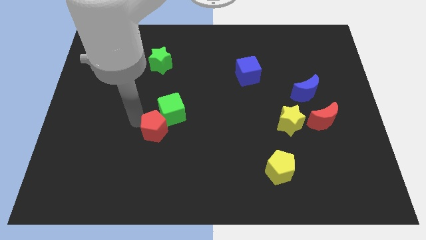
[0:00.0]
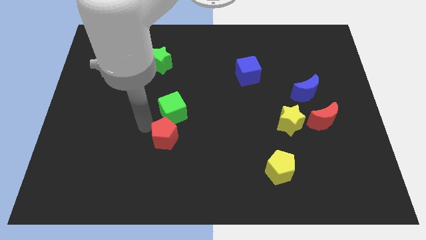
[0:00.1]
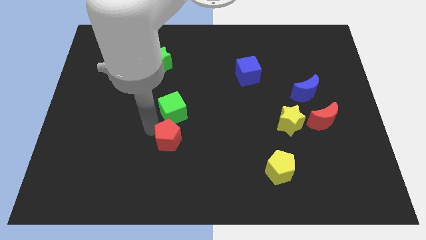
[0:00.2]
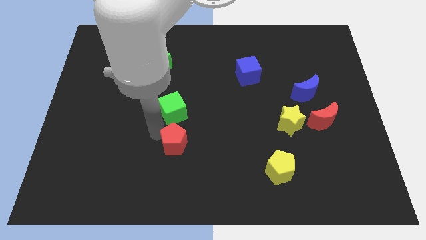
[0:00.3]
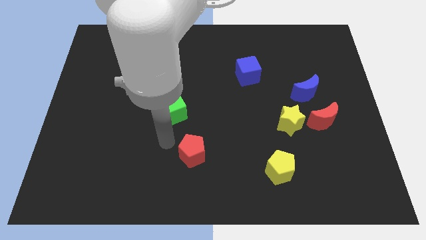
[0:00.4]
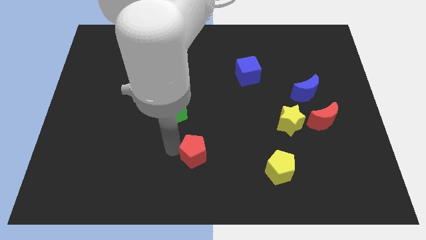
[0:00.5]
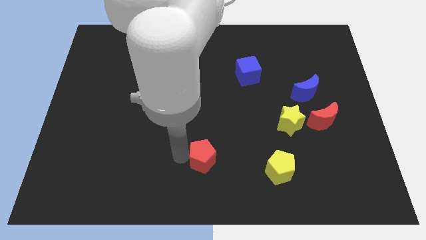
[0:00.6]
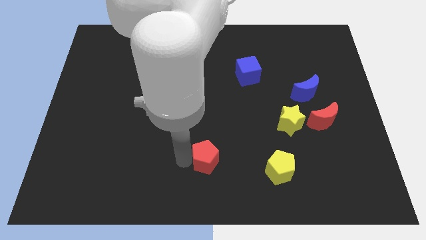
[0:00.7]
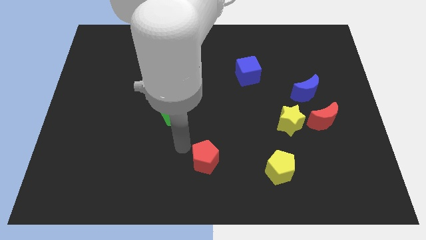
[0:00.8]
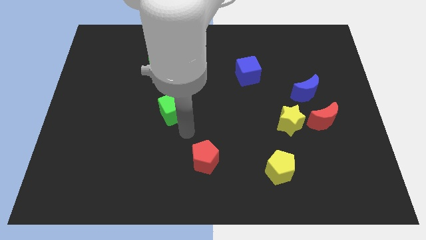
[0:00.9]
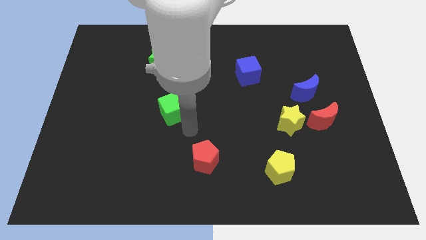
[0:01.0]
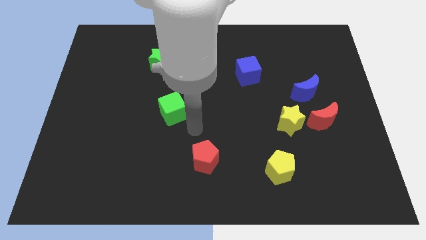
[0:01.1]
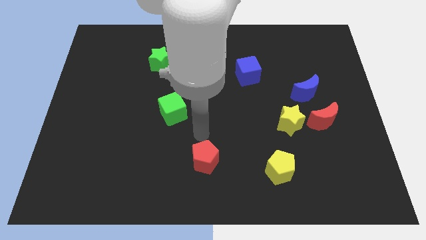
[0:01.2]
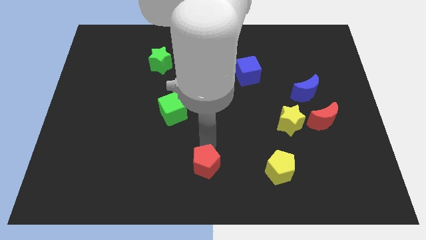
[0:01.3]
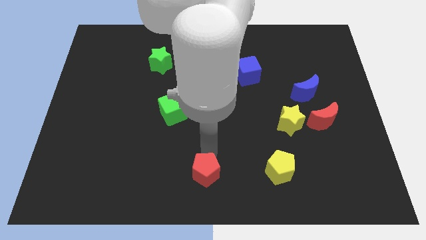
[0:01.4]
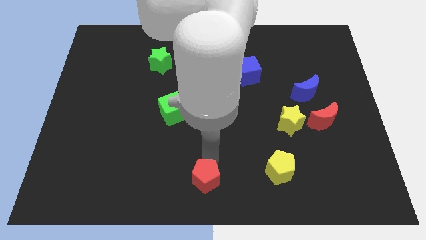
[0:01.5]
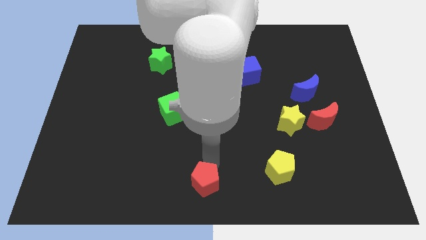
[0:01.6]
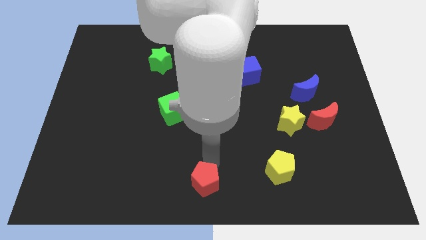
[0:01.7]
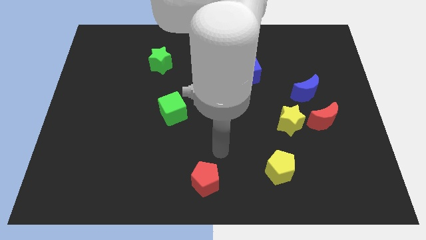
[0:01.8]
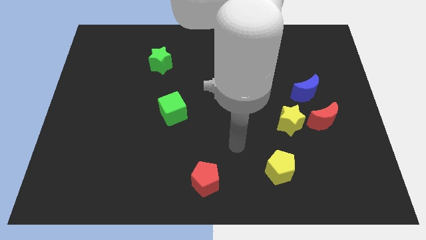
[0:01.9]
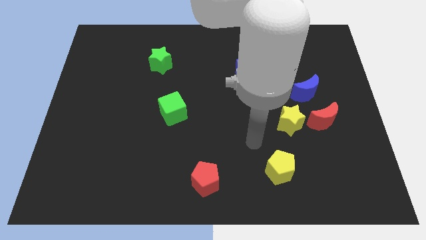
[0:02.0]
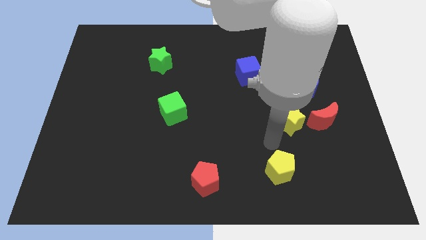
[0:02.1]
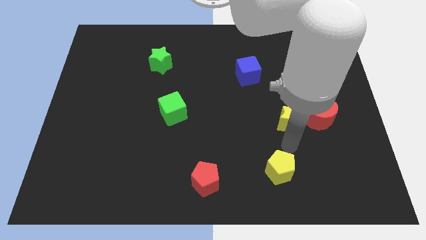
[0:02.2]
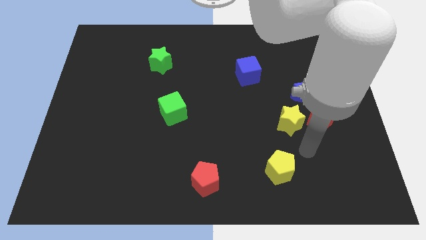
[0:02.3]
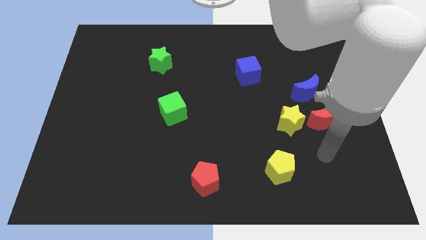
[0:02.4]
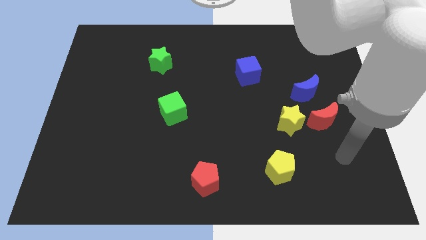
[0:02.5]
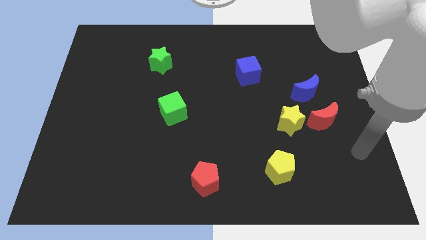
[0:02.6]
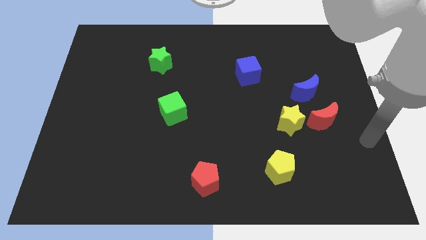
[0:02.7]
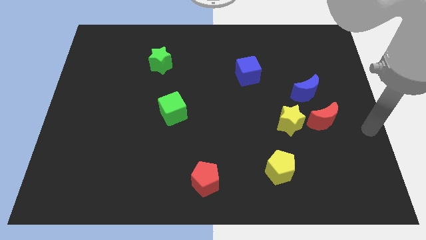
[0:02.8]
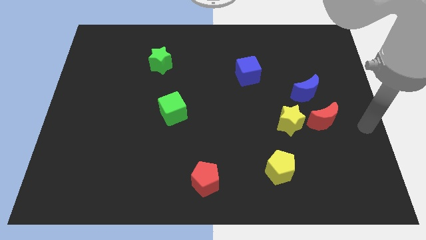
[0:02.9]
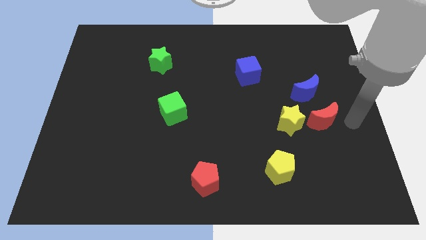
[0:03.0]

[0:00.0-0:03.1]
slide the red pentagon diagonally to the bottom right of the green cube

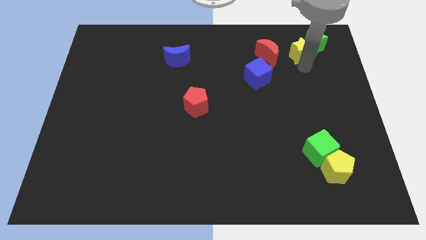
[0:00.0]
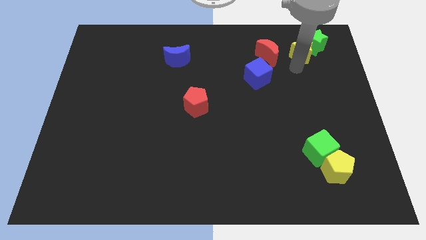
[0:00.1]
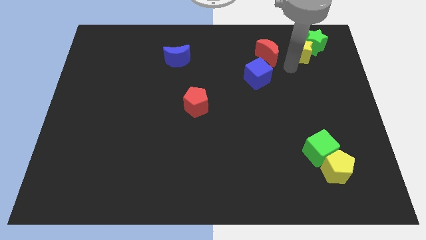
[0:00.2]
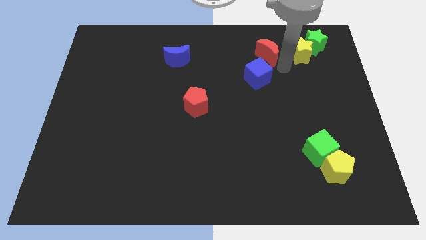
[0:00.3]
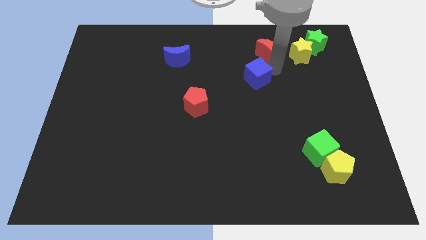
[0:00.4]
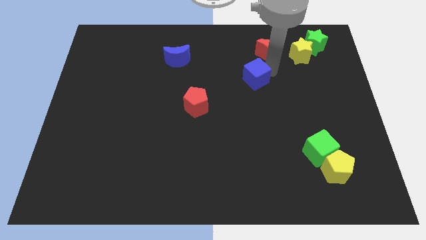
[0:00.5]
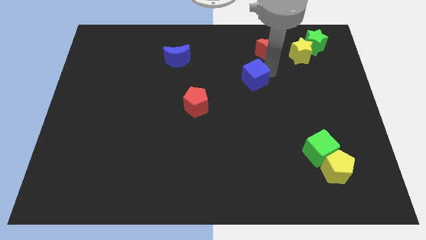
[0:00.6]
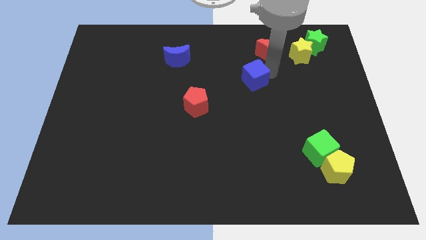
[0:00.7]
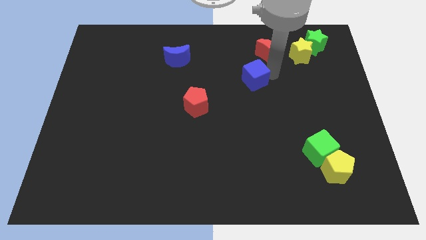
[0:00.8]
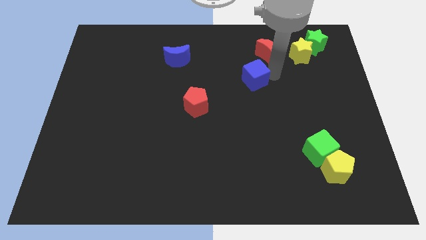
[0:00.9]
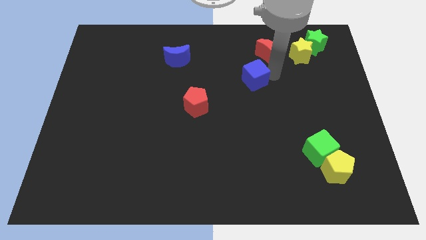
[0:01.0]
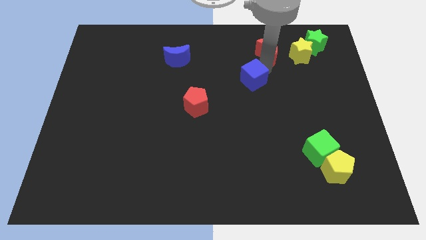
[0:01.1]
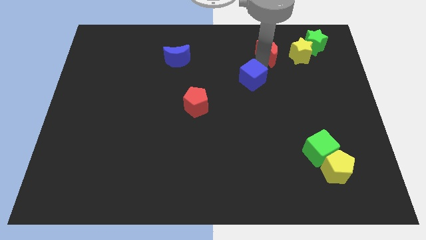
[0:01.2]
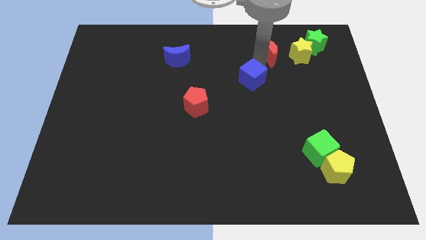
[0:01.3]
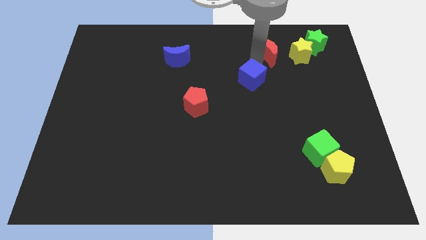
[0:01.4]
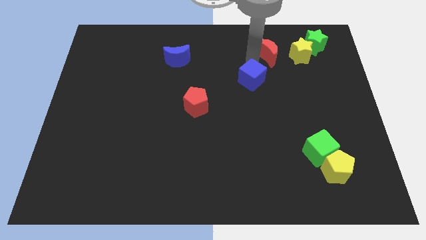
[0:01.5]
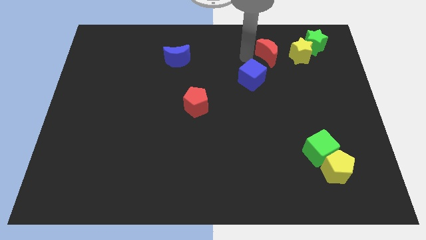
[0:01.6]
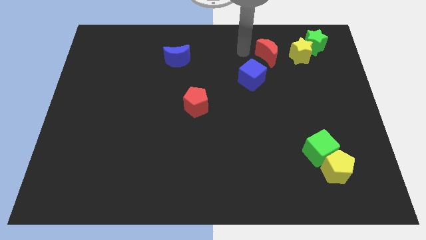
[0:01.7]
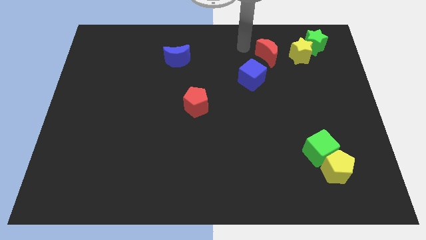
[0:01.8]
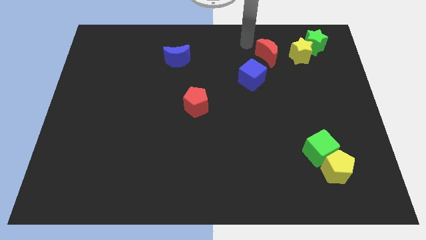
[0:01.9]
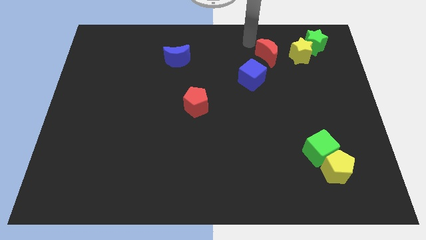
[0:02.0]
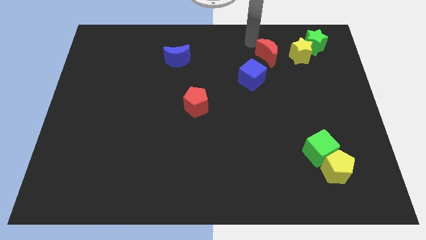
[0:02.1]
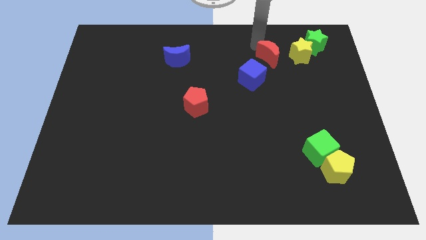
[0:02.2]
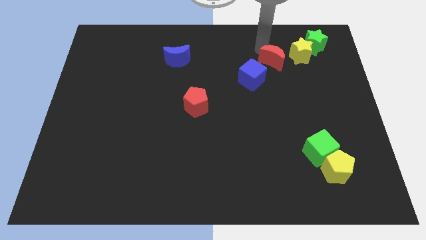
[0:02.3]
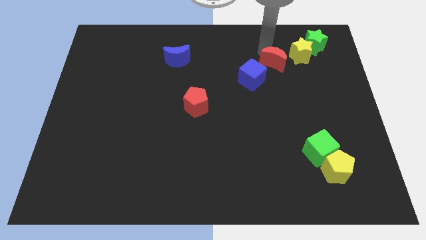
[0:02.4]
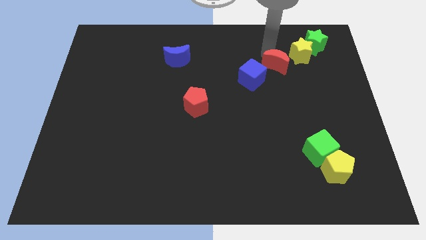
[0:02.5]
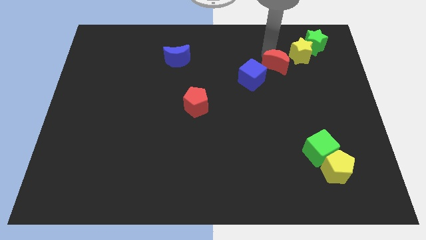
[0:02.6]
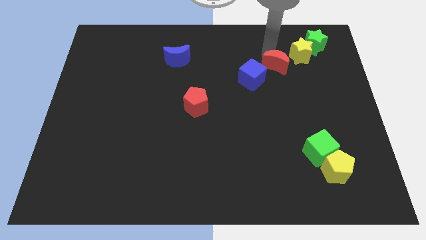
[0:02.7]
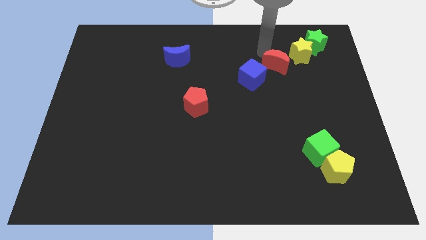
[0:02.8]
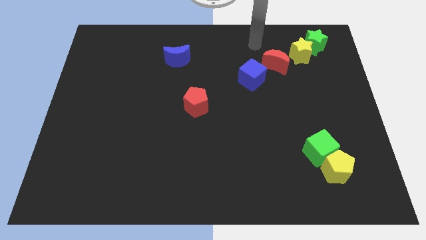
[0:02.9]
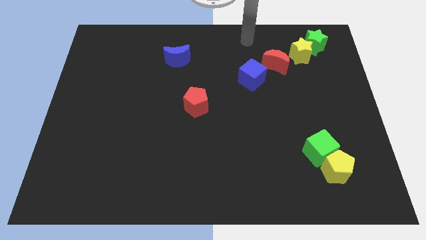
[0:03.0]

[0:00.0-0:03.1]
adjust blue cube and red moon to form a diagonal line with other blocks

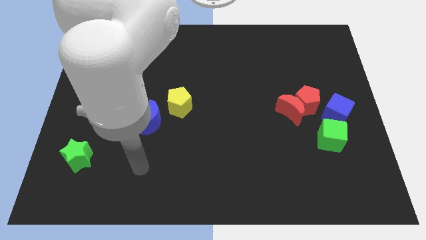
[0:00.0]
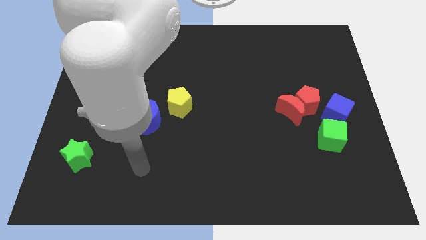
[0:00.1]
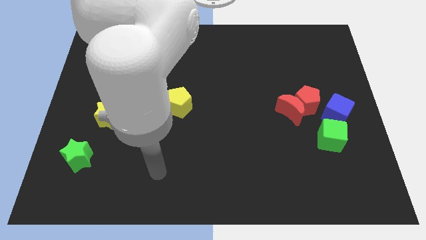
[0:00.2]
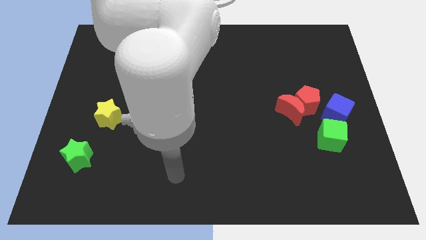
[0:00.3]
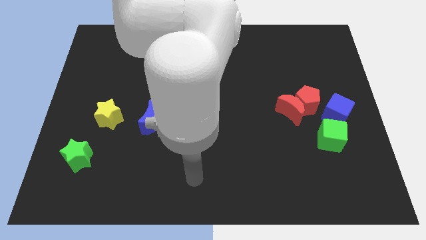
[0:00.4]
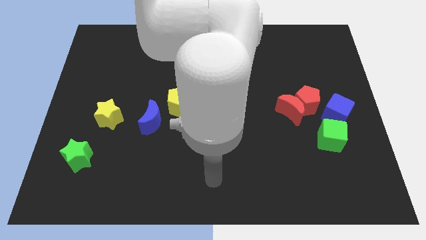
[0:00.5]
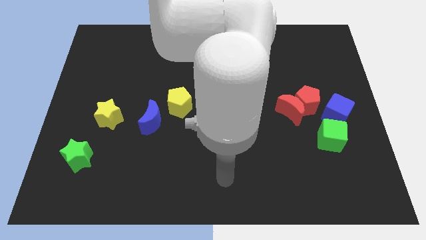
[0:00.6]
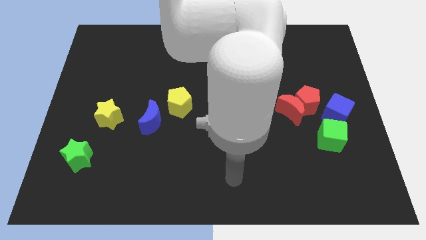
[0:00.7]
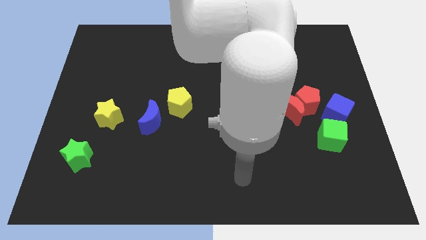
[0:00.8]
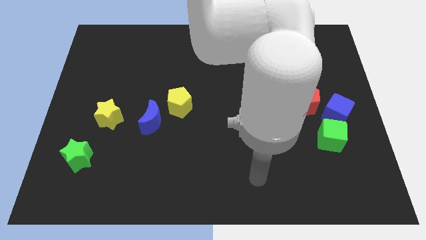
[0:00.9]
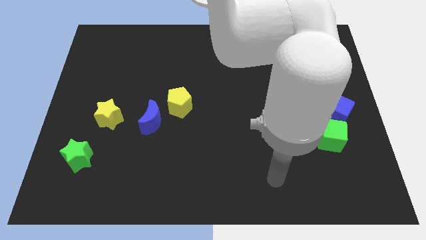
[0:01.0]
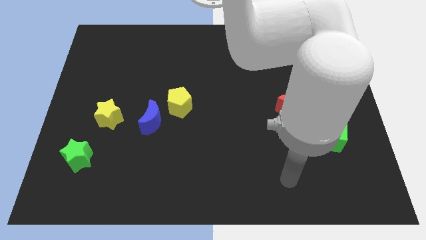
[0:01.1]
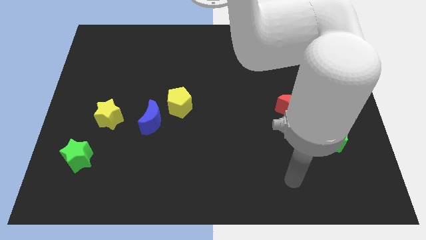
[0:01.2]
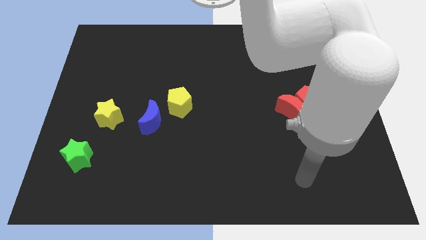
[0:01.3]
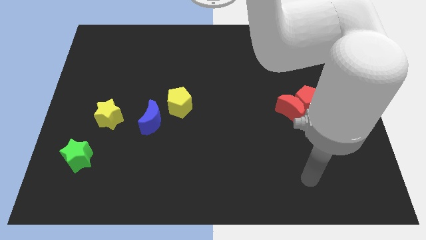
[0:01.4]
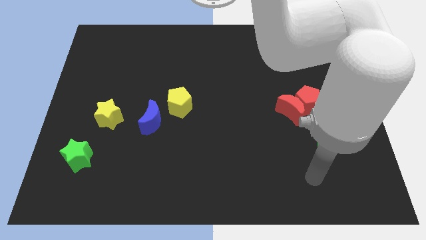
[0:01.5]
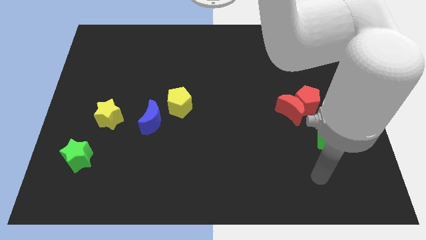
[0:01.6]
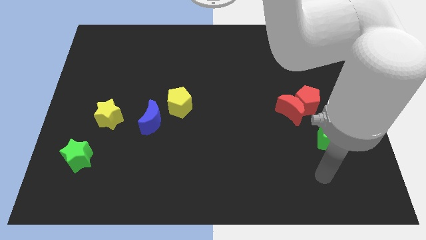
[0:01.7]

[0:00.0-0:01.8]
place your arm below the green cube

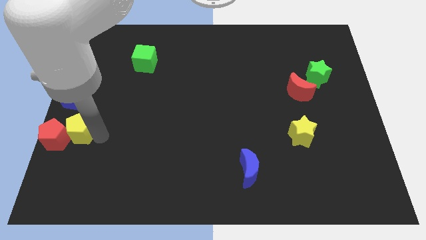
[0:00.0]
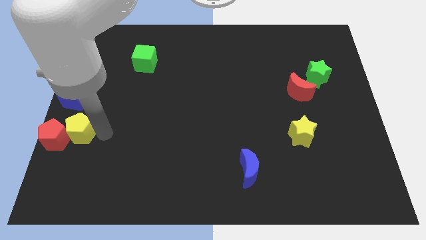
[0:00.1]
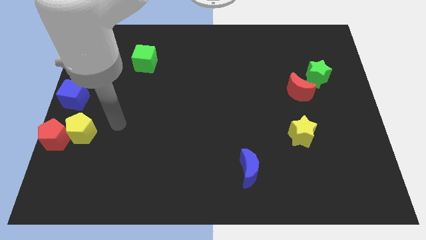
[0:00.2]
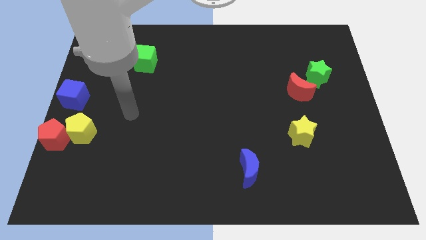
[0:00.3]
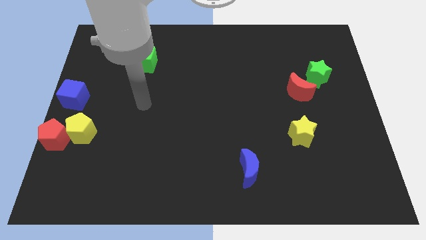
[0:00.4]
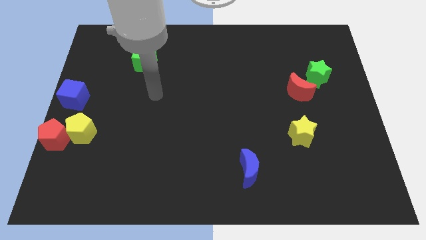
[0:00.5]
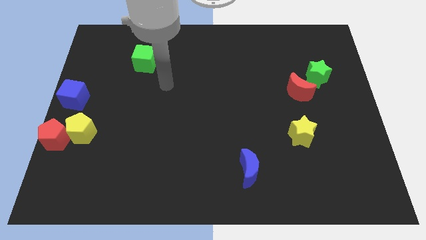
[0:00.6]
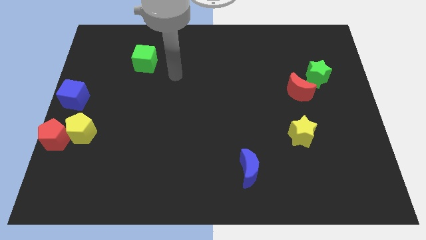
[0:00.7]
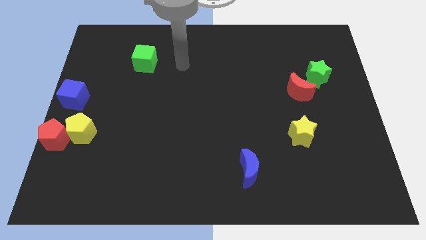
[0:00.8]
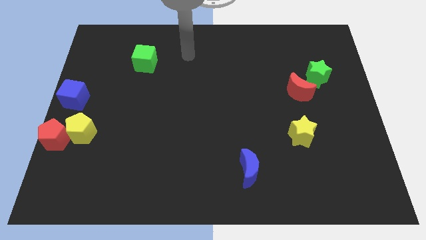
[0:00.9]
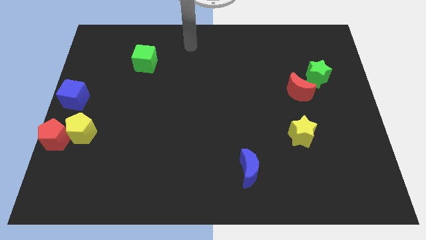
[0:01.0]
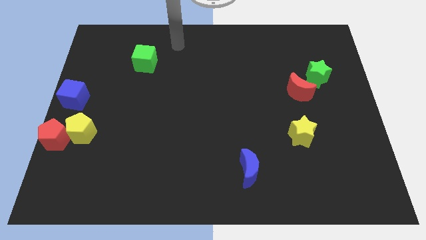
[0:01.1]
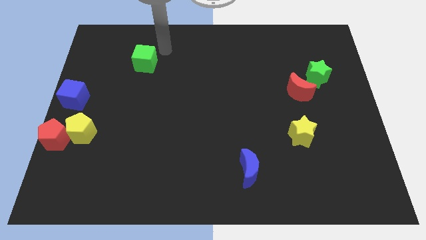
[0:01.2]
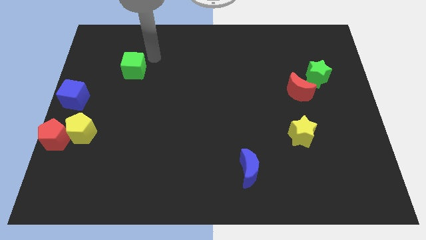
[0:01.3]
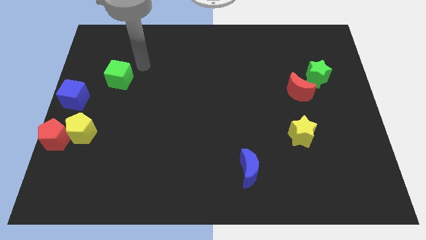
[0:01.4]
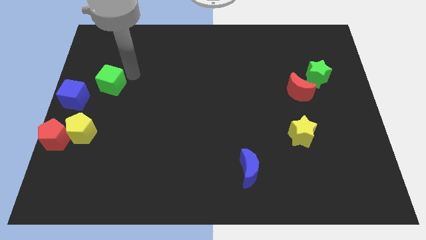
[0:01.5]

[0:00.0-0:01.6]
move your arm away from the yellow pentagon
